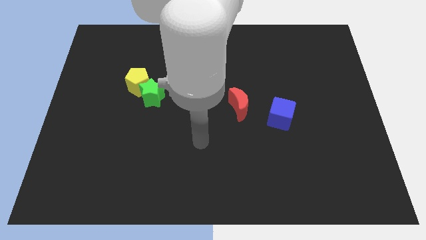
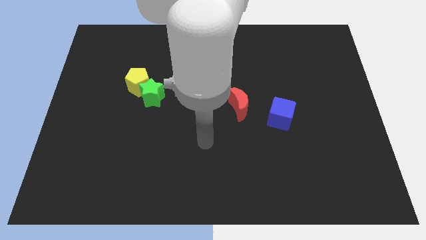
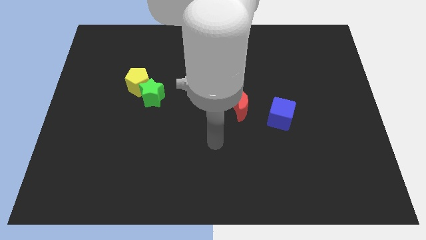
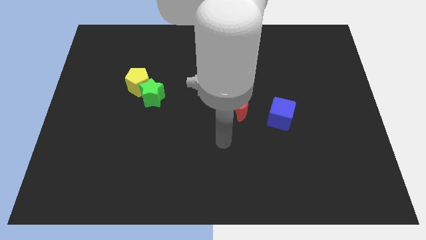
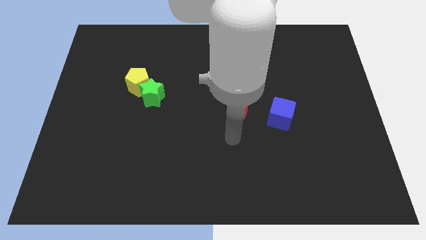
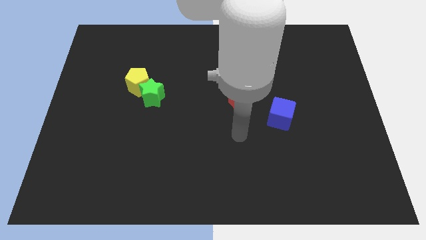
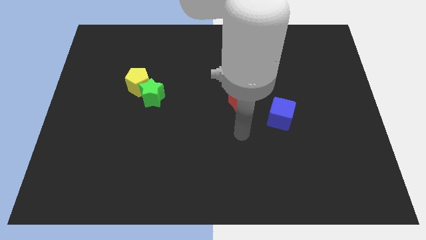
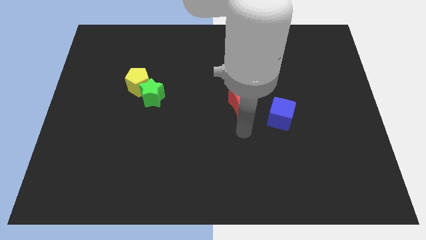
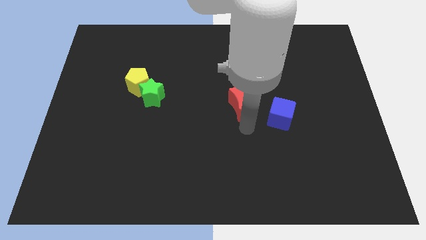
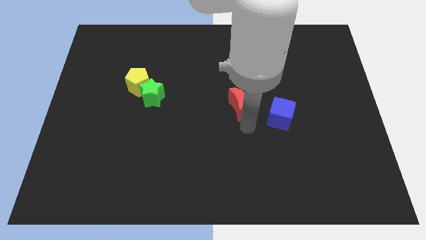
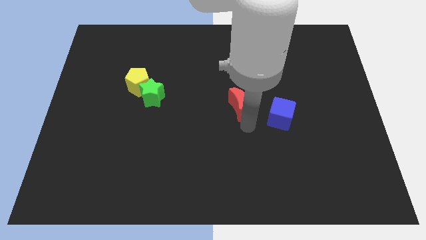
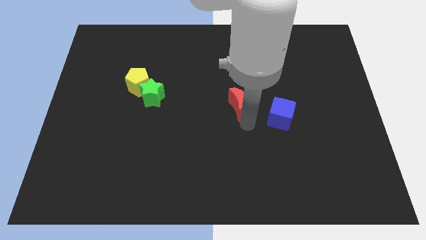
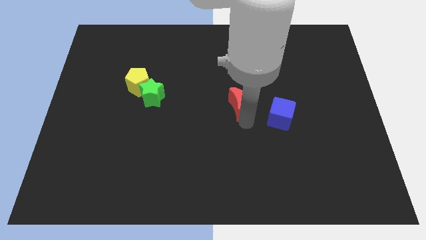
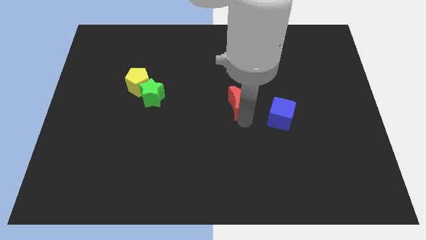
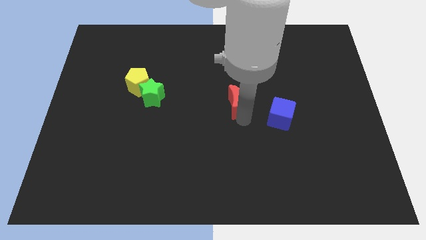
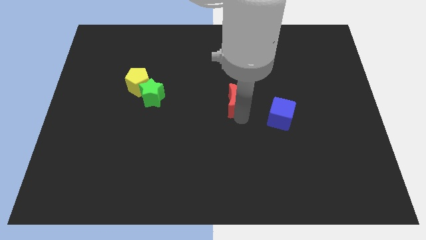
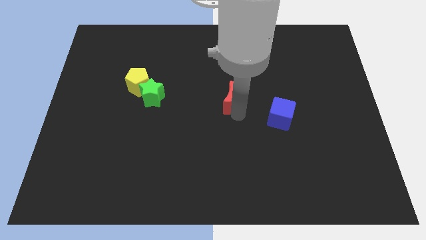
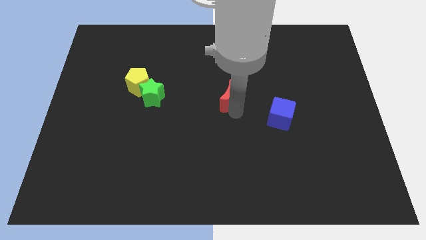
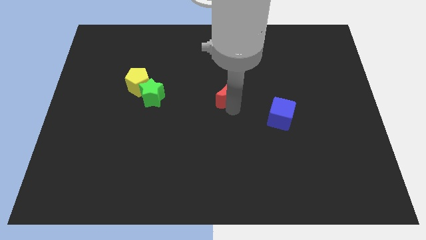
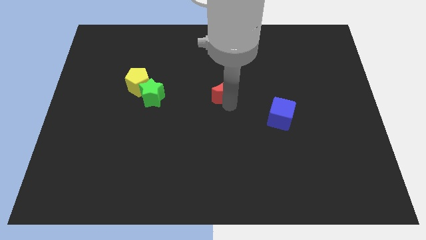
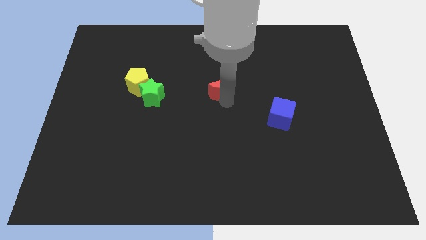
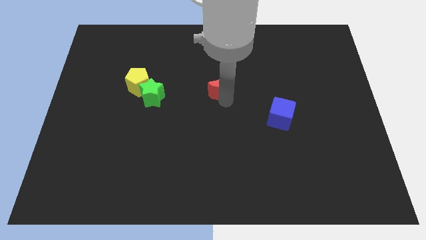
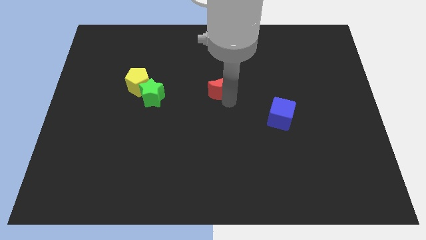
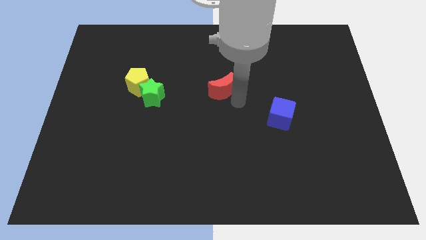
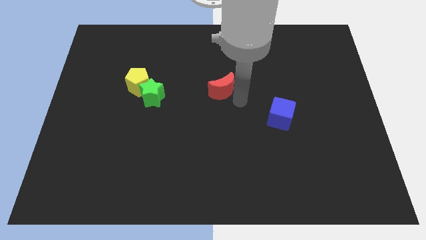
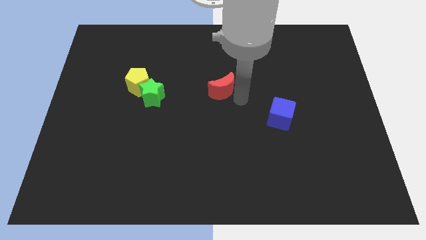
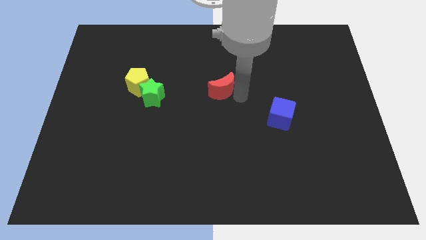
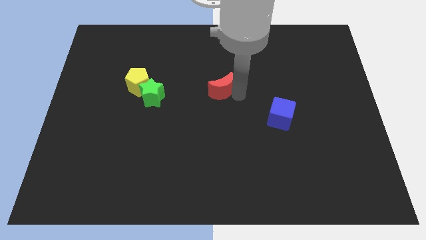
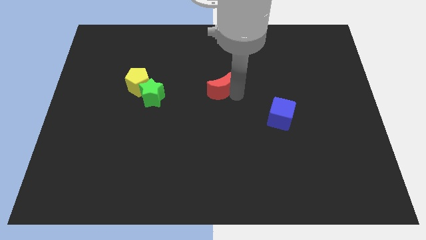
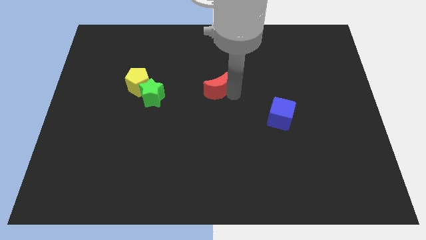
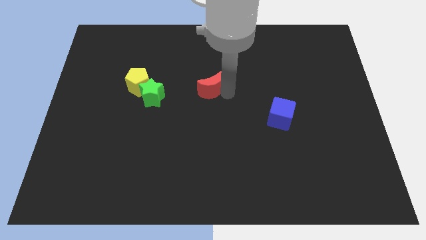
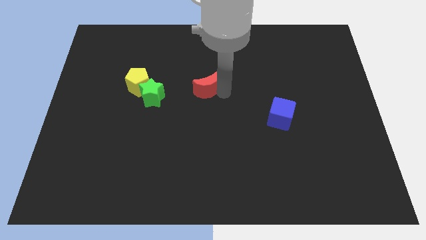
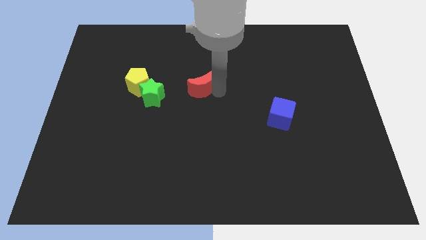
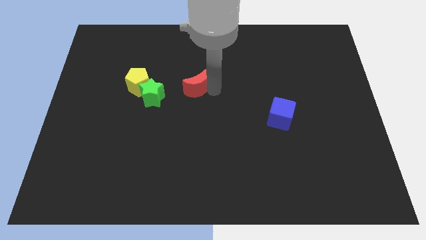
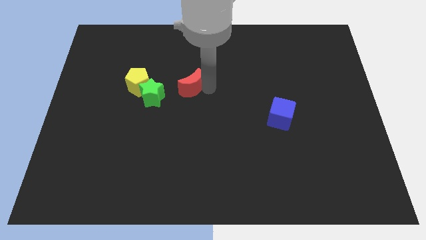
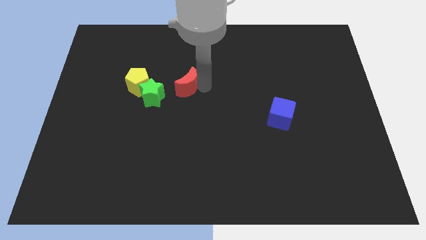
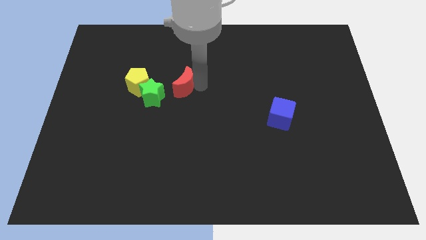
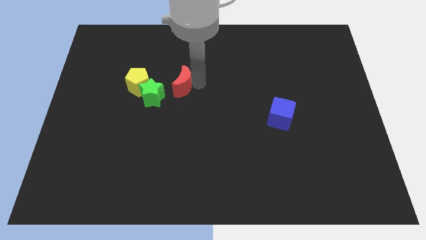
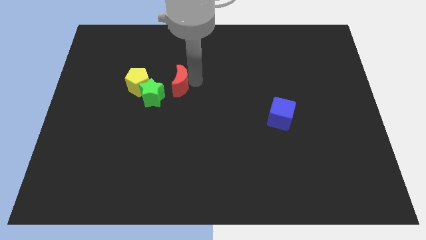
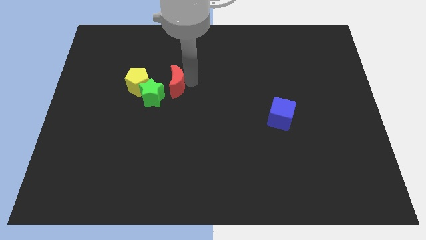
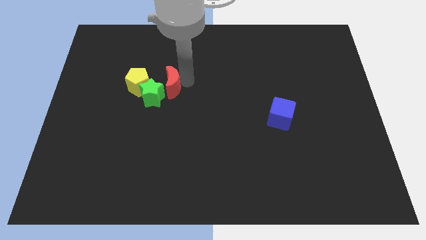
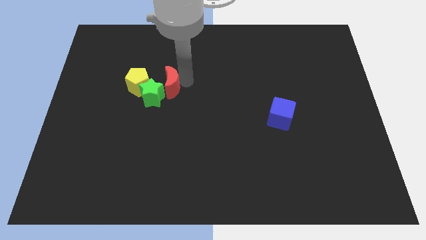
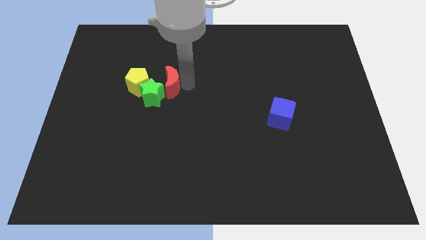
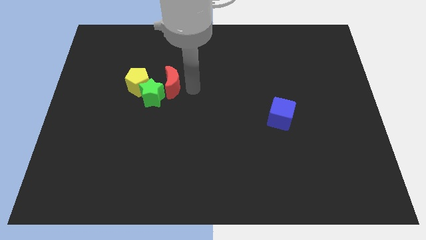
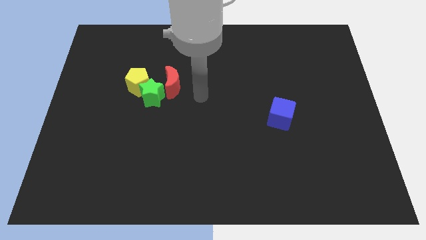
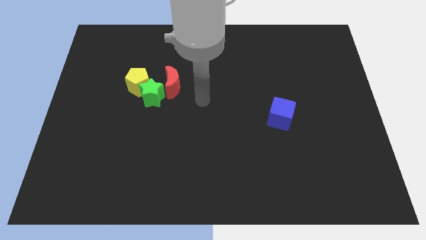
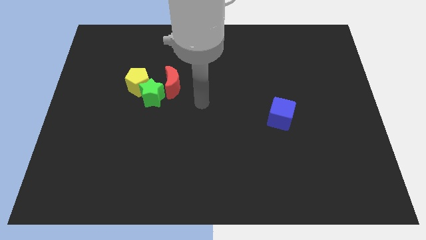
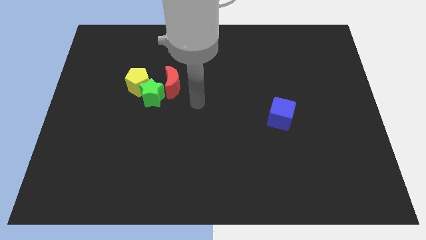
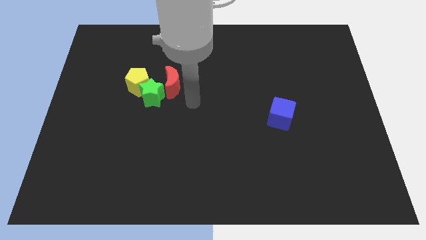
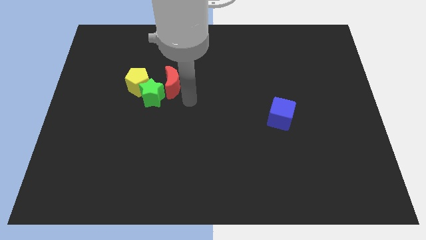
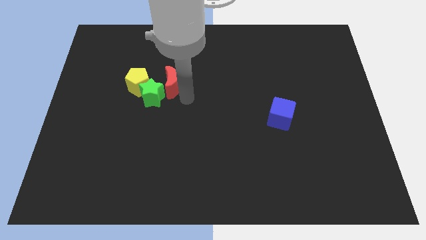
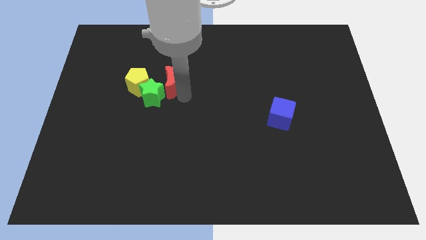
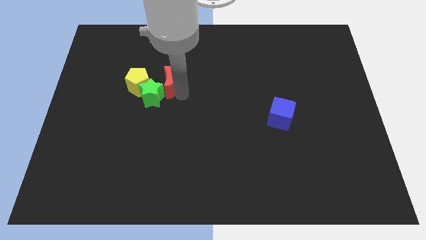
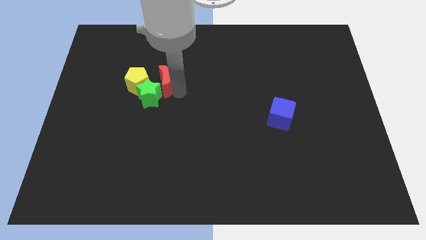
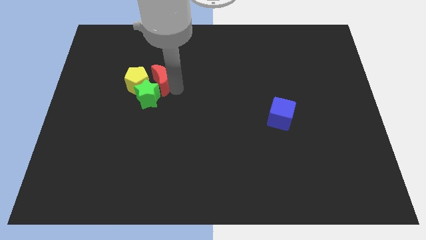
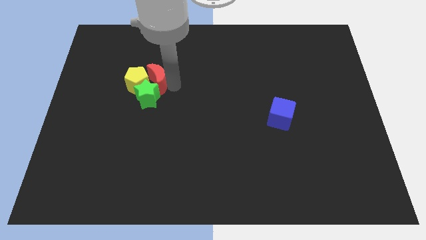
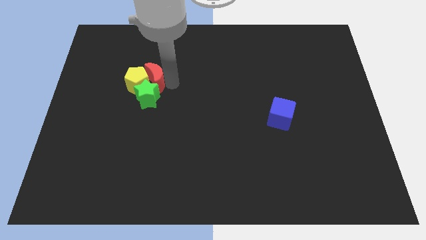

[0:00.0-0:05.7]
put the red block next to the pentagon

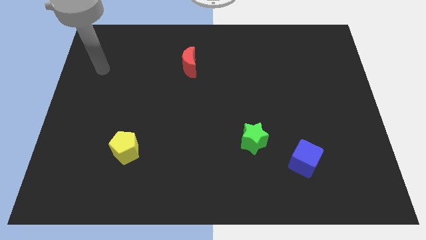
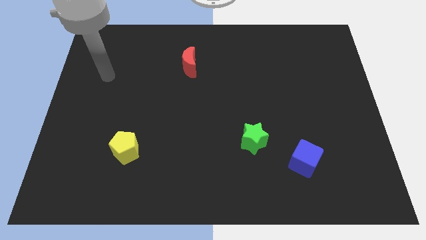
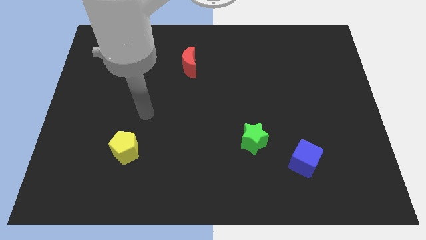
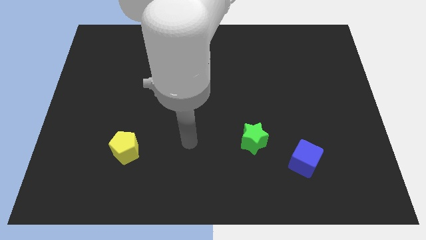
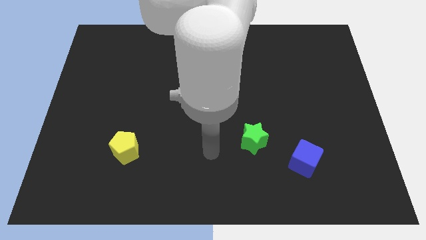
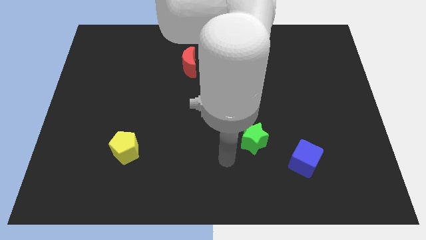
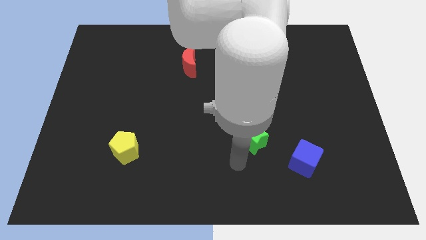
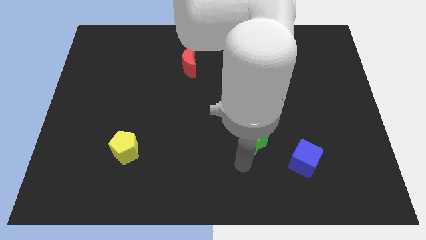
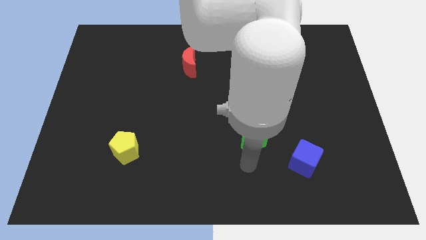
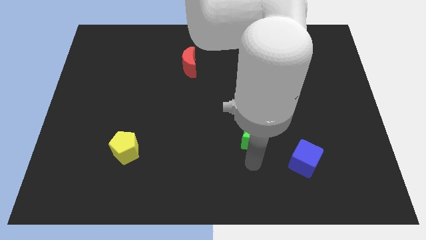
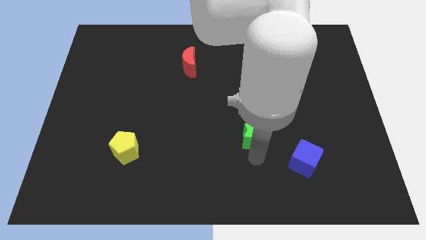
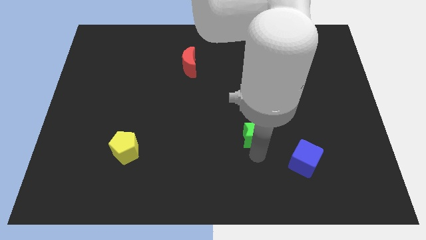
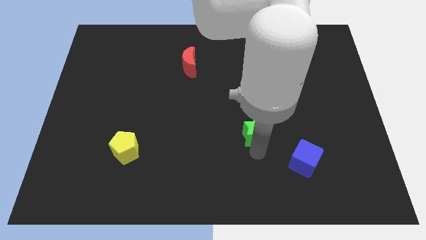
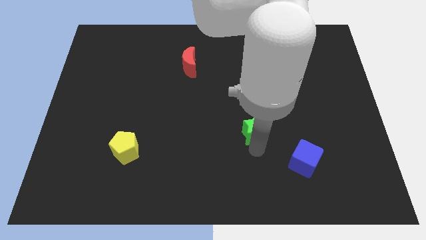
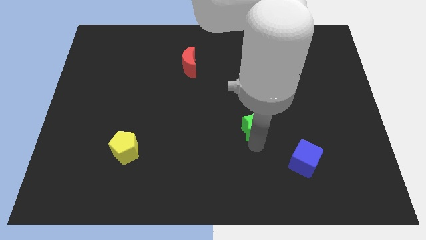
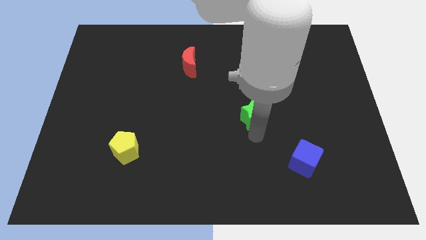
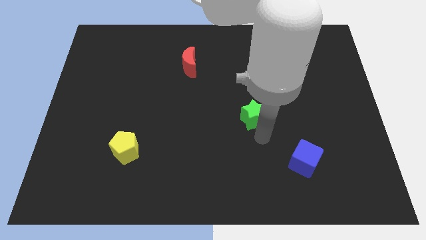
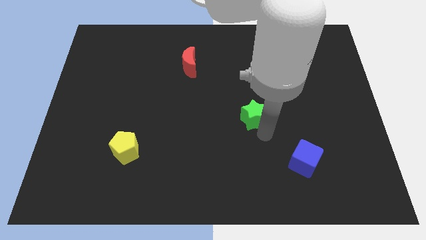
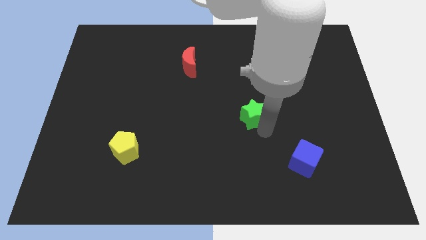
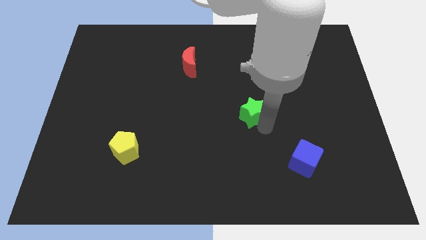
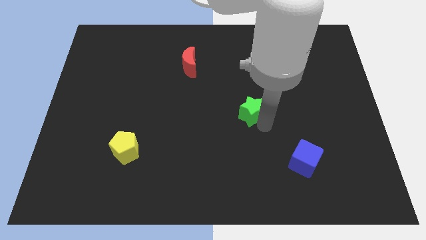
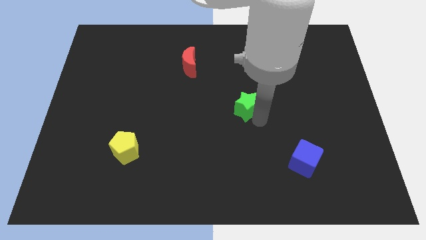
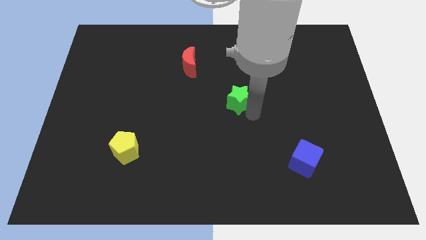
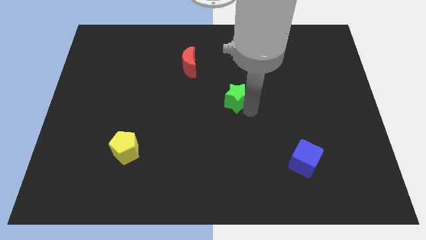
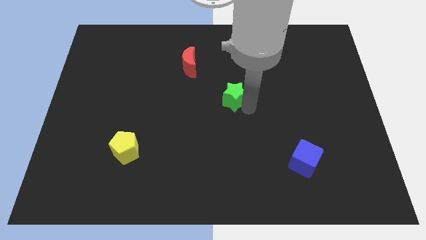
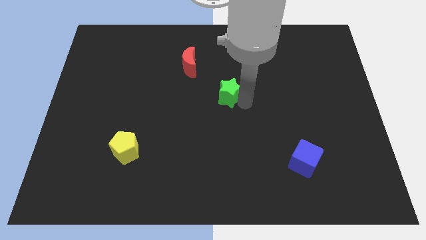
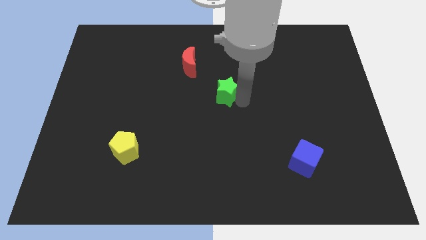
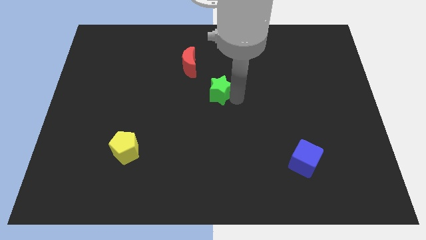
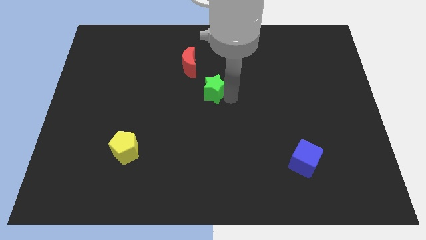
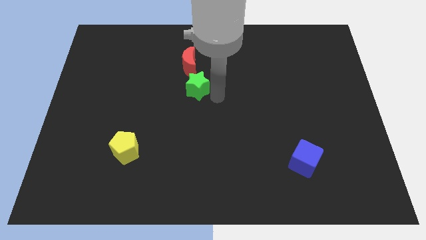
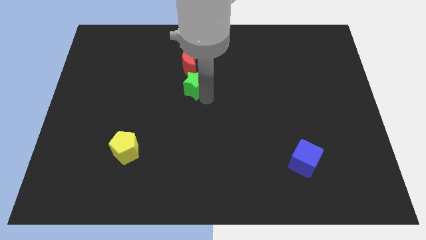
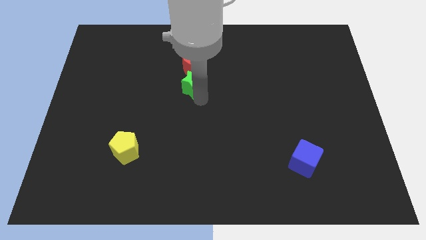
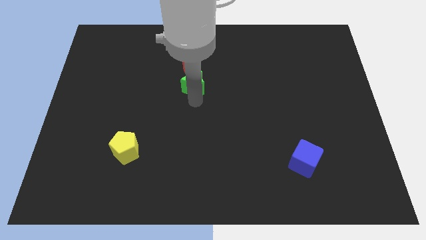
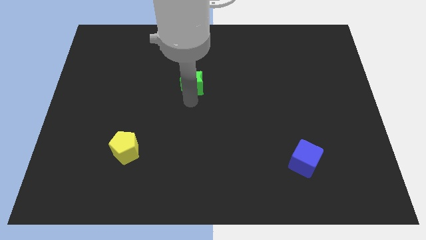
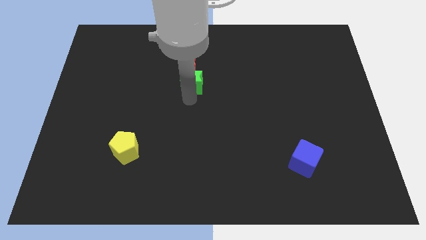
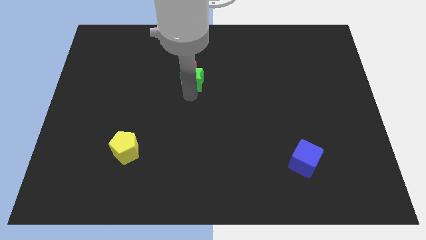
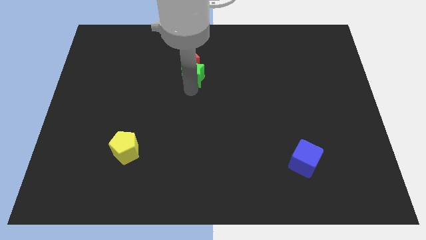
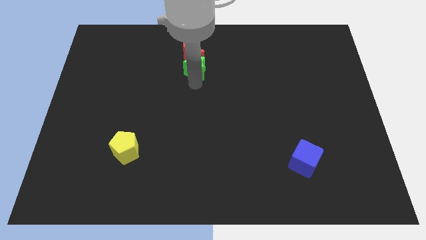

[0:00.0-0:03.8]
put the green star close to the moon
